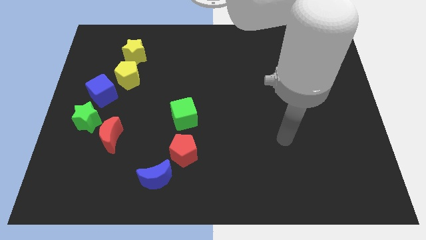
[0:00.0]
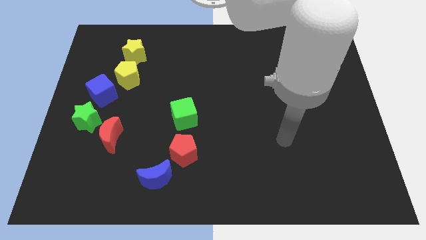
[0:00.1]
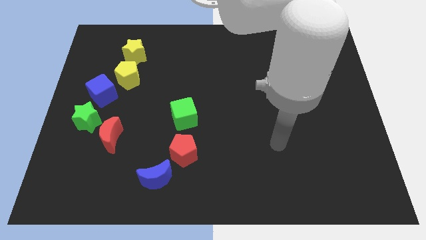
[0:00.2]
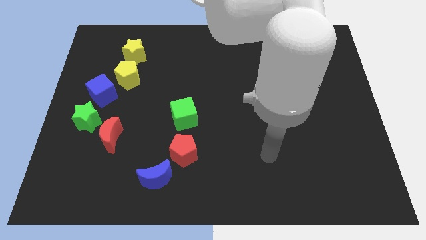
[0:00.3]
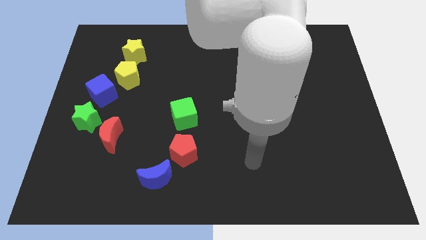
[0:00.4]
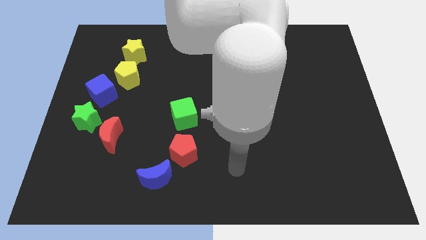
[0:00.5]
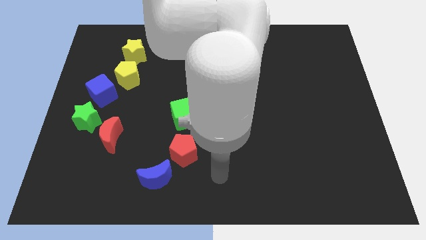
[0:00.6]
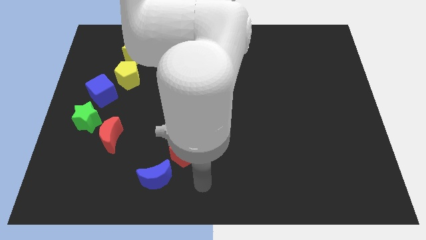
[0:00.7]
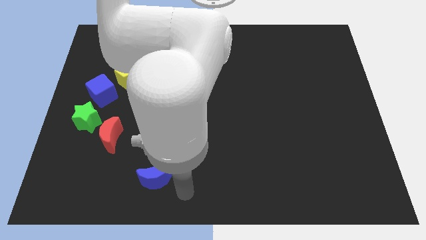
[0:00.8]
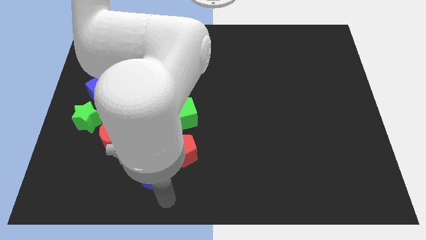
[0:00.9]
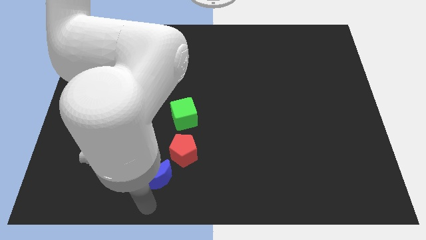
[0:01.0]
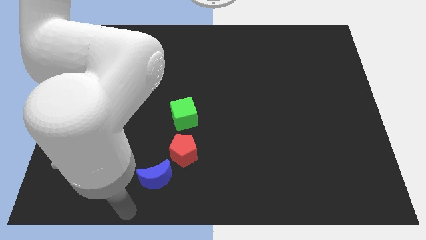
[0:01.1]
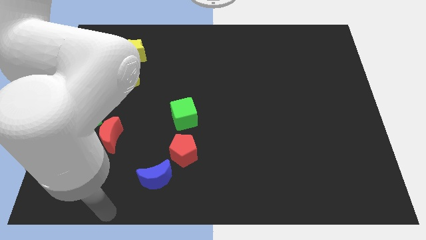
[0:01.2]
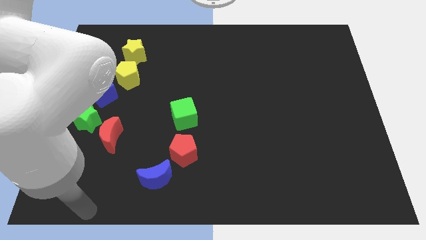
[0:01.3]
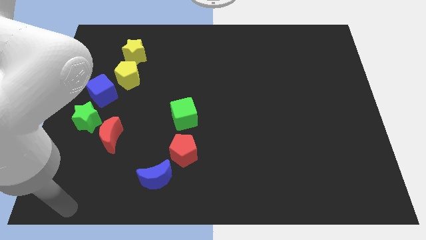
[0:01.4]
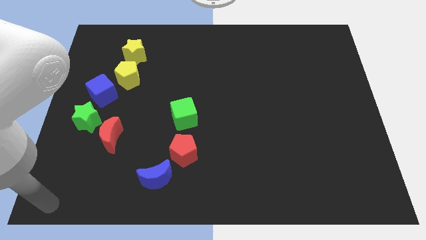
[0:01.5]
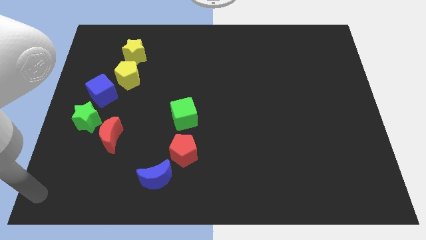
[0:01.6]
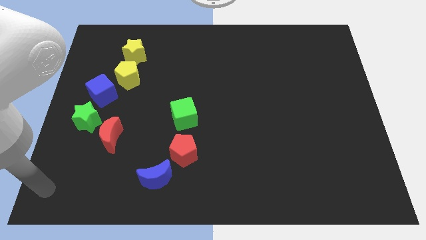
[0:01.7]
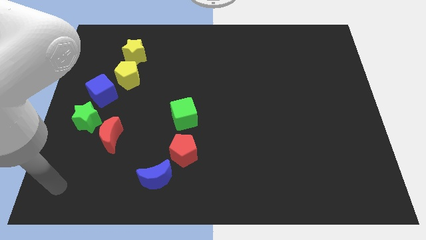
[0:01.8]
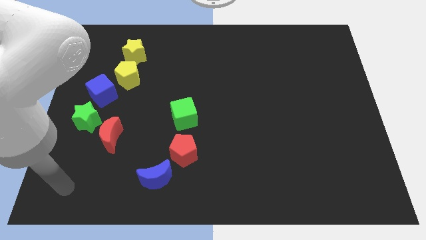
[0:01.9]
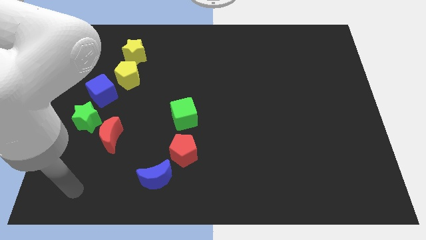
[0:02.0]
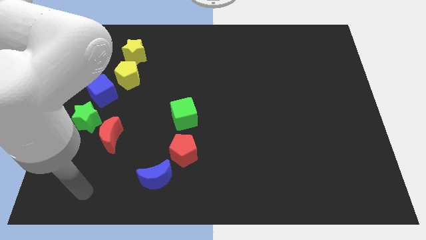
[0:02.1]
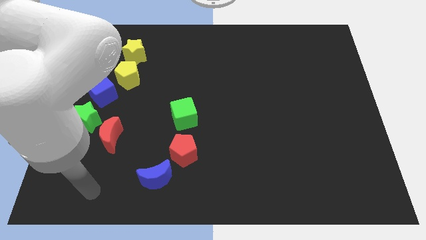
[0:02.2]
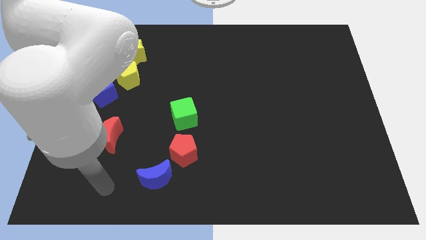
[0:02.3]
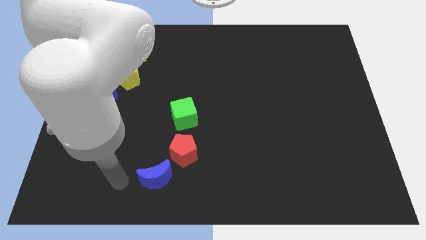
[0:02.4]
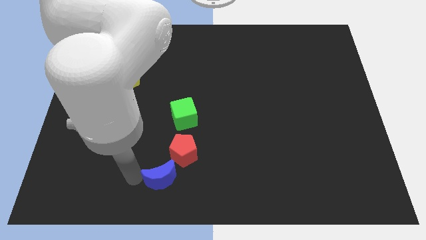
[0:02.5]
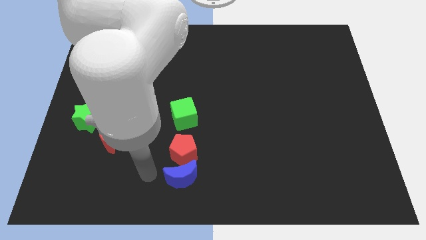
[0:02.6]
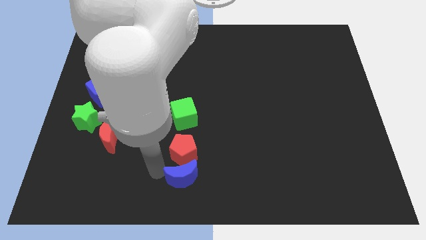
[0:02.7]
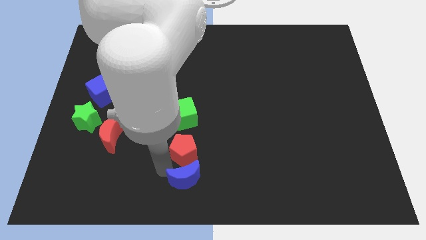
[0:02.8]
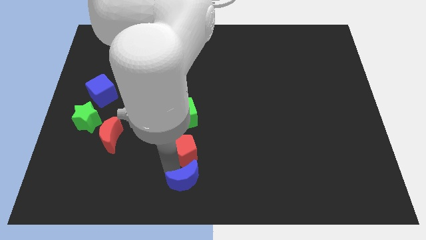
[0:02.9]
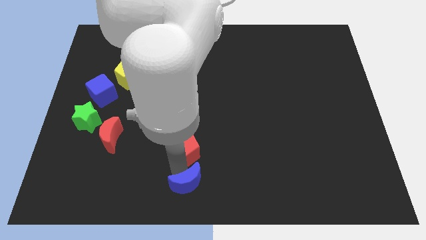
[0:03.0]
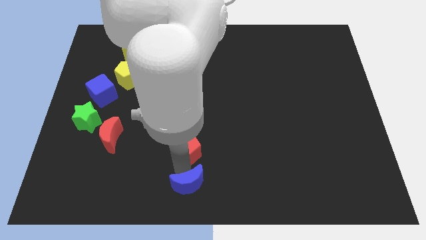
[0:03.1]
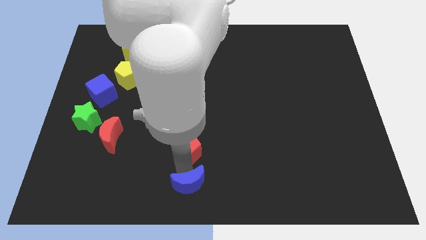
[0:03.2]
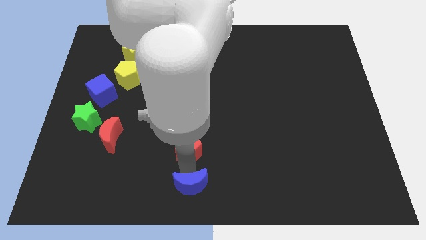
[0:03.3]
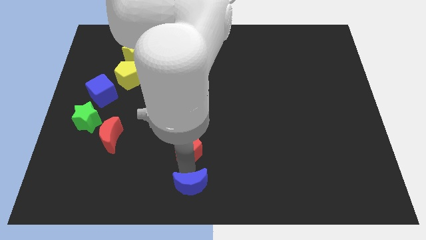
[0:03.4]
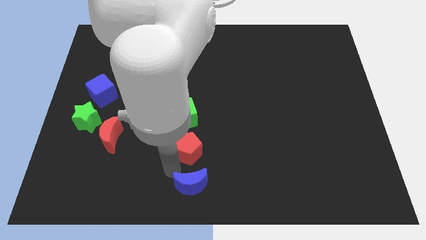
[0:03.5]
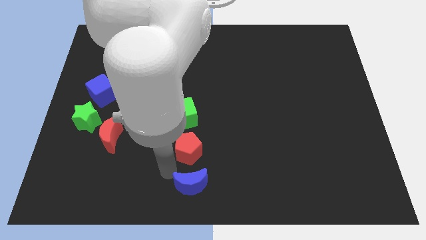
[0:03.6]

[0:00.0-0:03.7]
push the blue crescent towards the bottom of the board

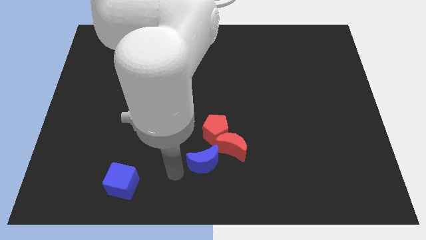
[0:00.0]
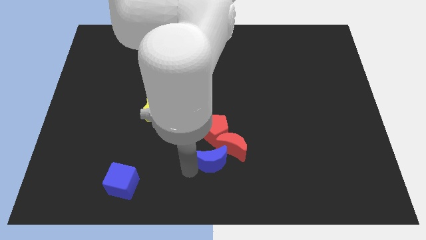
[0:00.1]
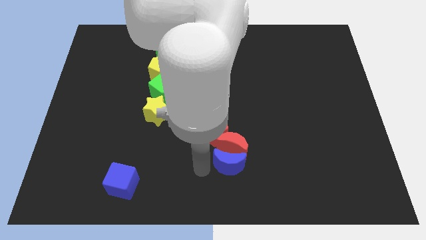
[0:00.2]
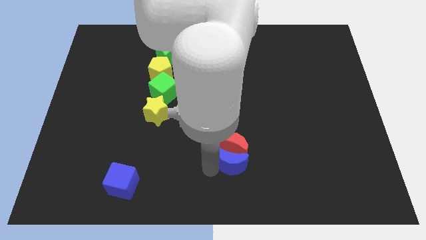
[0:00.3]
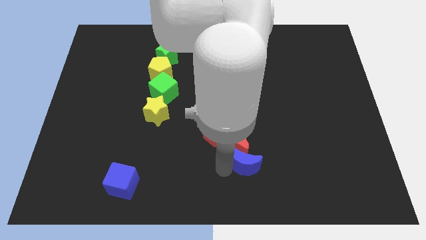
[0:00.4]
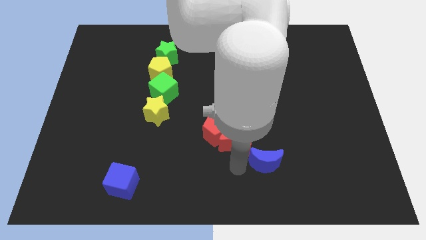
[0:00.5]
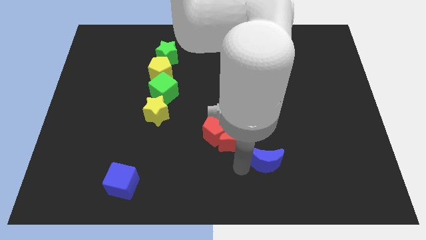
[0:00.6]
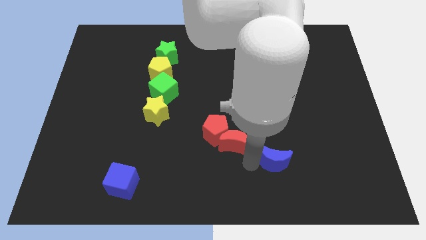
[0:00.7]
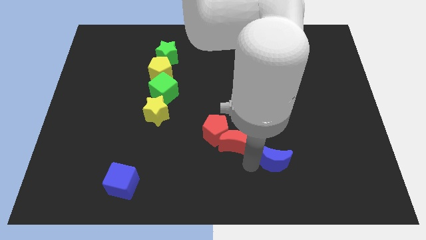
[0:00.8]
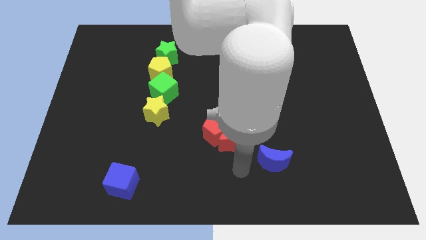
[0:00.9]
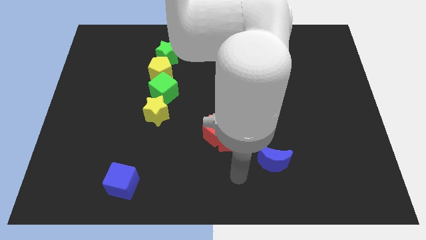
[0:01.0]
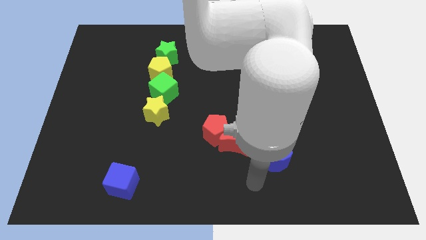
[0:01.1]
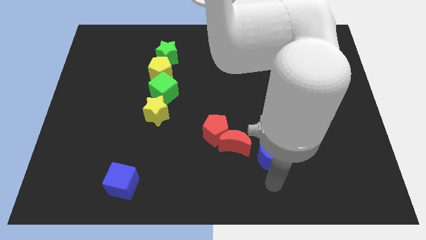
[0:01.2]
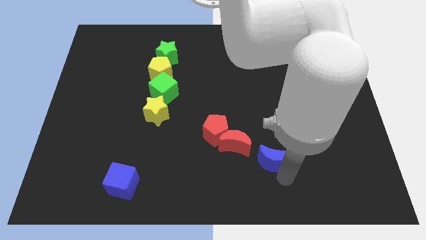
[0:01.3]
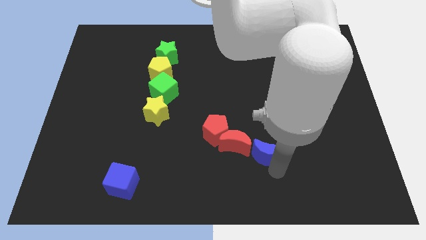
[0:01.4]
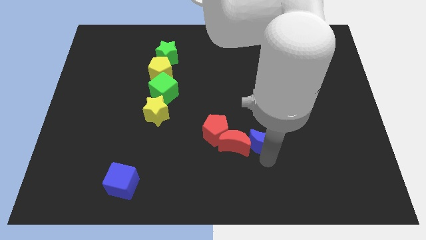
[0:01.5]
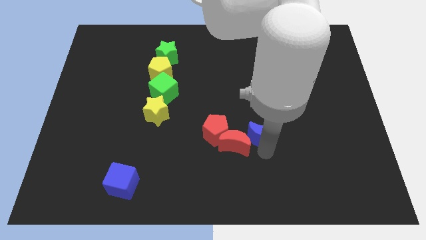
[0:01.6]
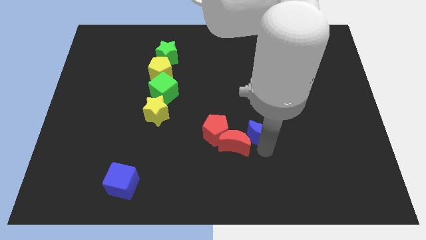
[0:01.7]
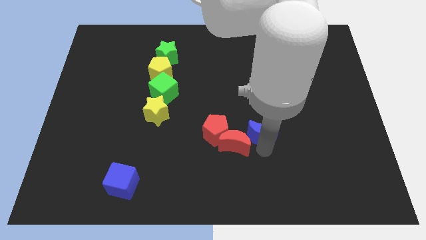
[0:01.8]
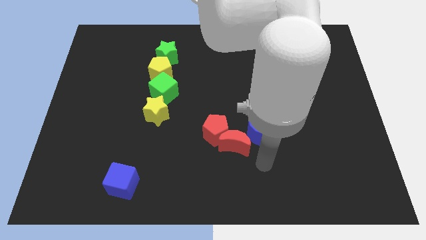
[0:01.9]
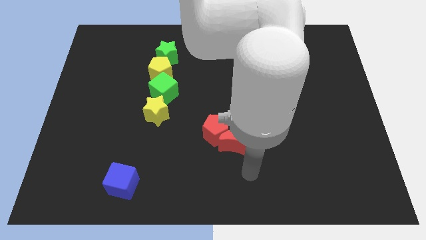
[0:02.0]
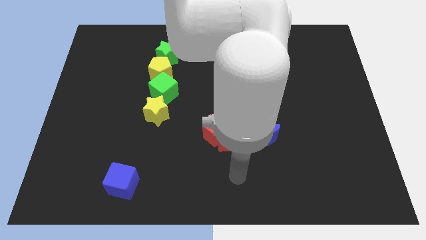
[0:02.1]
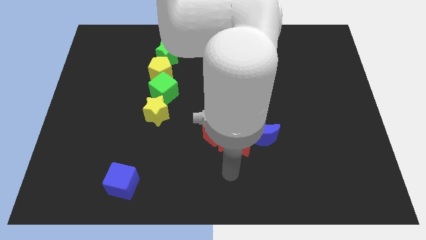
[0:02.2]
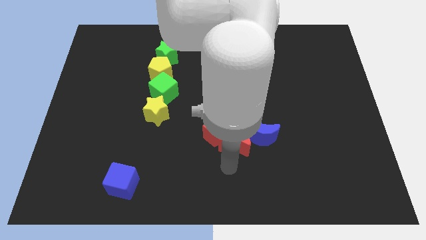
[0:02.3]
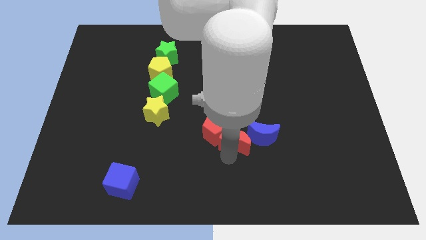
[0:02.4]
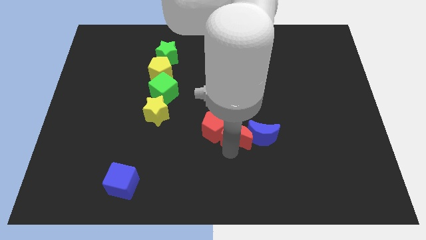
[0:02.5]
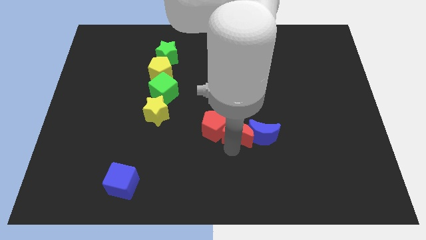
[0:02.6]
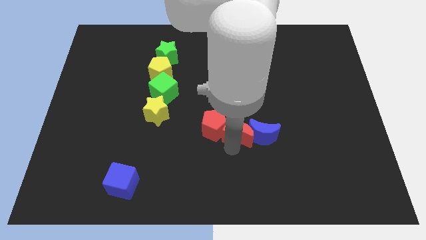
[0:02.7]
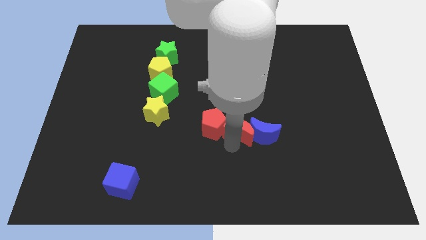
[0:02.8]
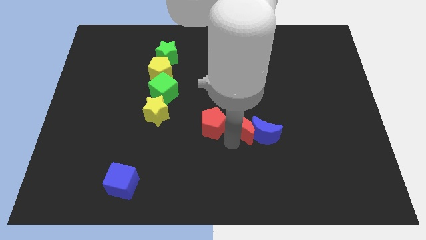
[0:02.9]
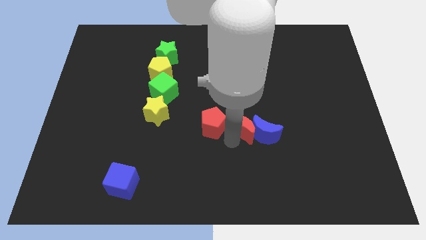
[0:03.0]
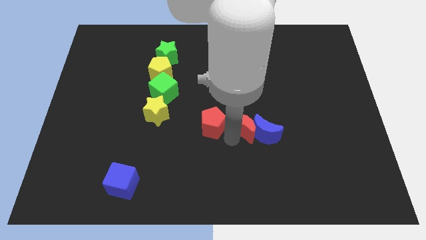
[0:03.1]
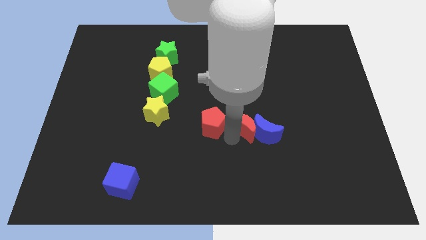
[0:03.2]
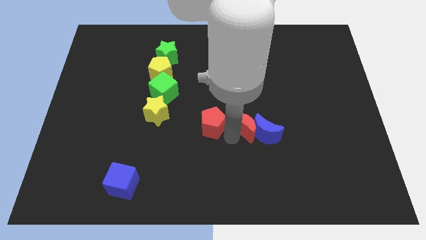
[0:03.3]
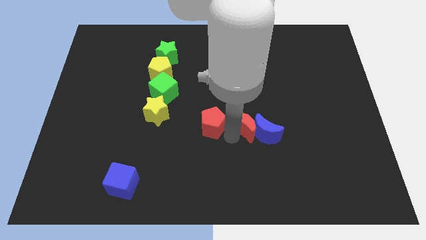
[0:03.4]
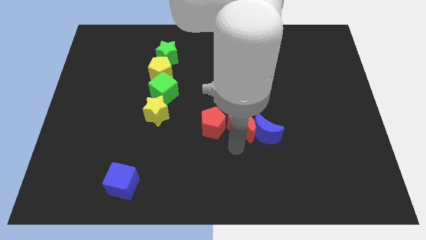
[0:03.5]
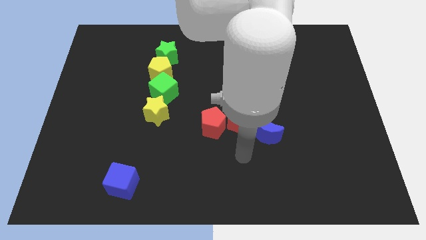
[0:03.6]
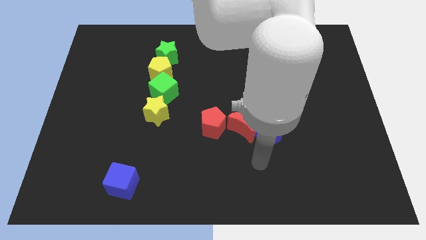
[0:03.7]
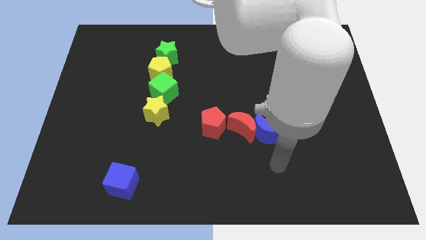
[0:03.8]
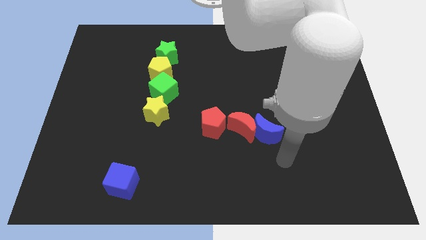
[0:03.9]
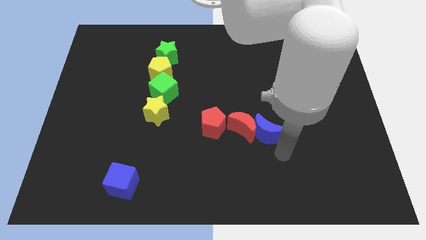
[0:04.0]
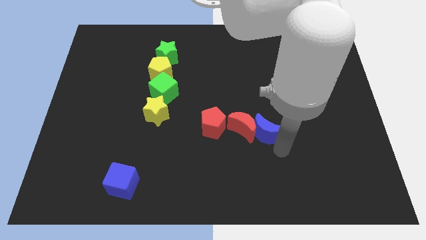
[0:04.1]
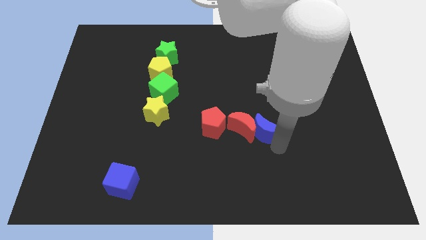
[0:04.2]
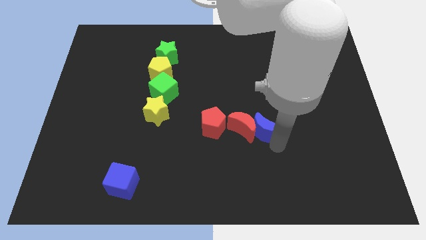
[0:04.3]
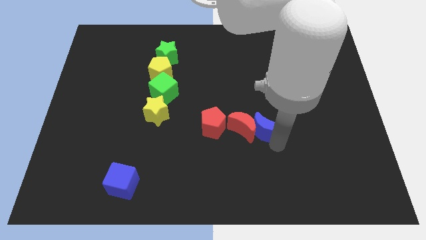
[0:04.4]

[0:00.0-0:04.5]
place the blue crescent right to the red crescent

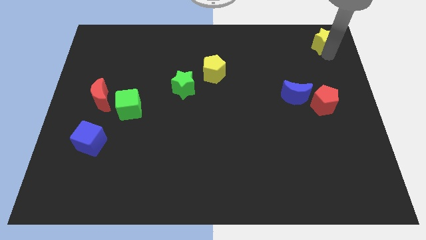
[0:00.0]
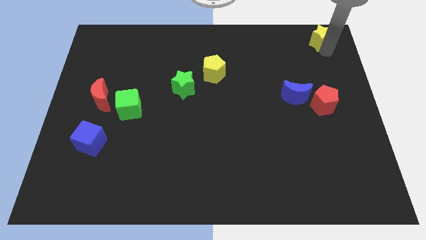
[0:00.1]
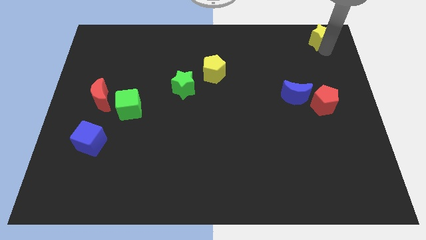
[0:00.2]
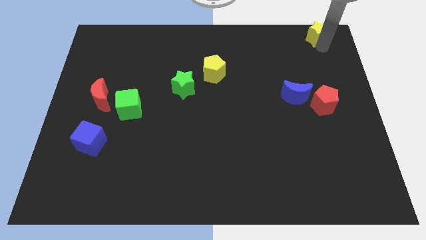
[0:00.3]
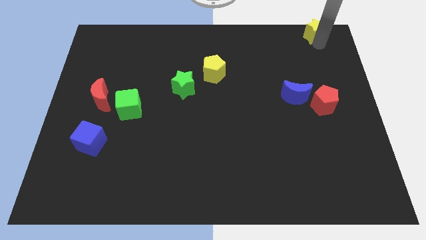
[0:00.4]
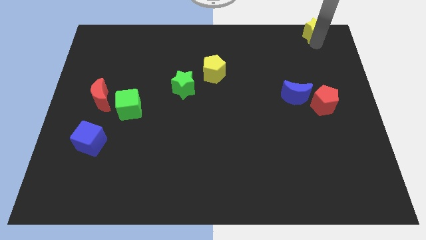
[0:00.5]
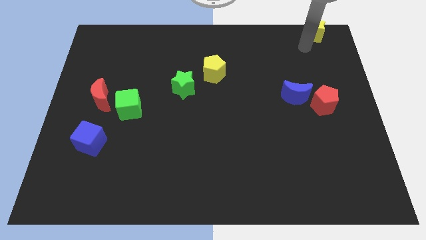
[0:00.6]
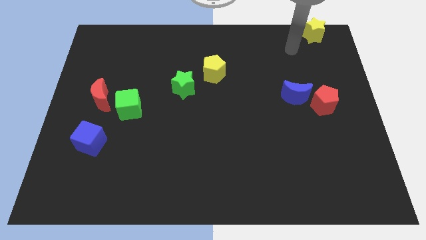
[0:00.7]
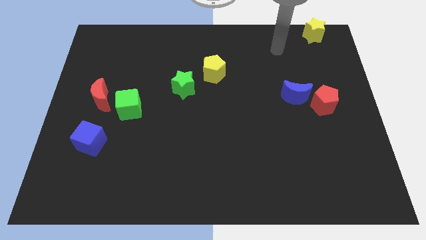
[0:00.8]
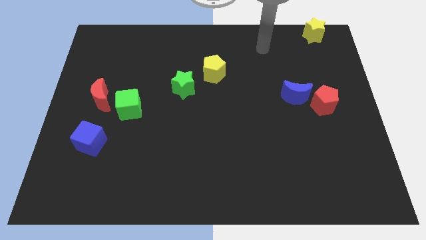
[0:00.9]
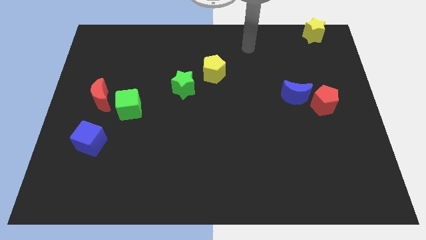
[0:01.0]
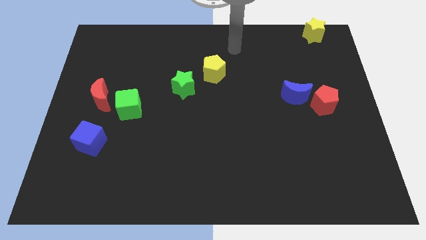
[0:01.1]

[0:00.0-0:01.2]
slight push the yellow star top right corner
